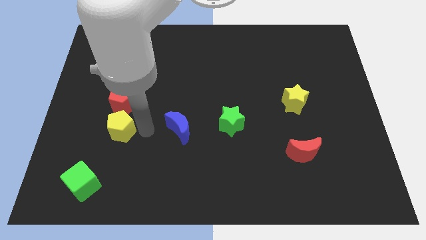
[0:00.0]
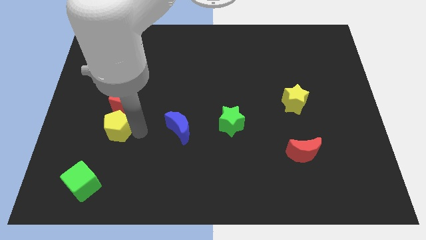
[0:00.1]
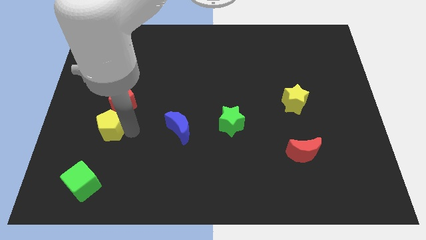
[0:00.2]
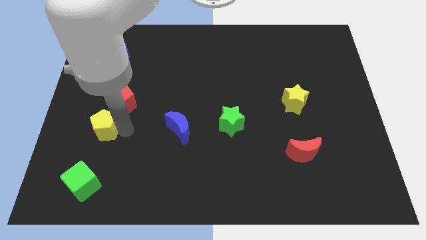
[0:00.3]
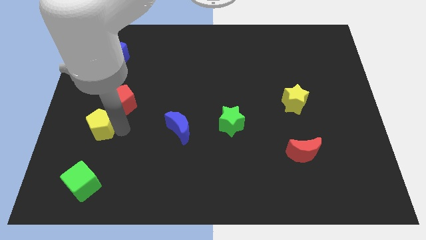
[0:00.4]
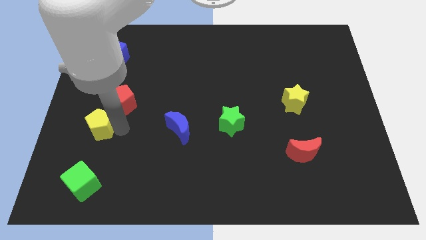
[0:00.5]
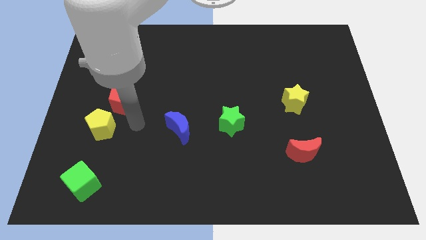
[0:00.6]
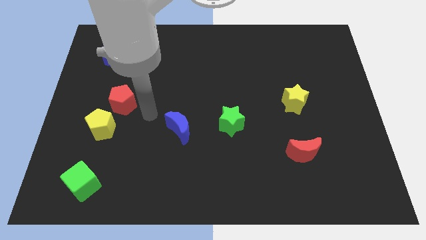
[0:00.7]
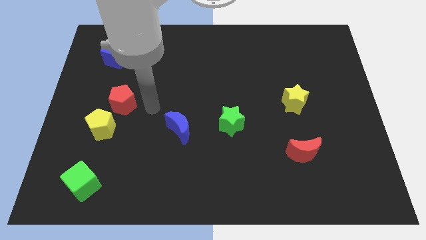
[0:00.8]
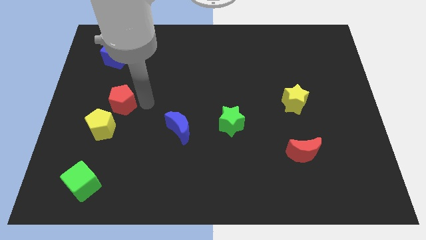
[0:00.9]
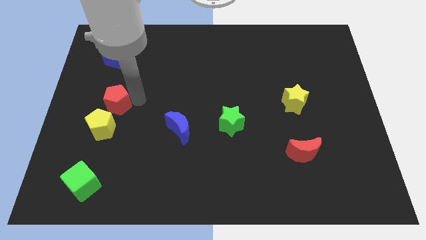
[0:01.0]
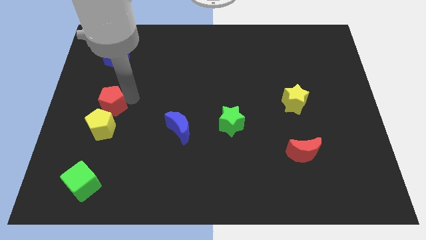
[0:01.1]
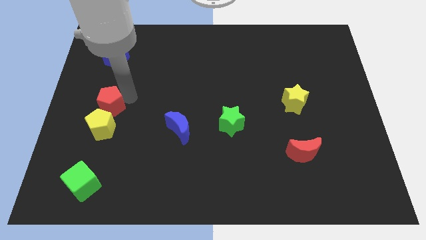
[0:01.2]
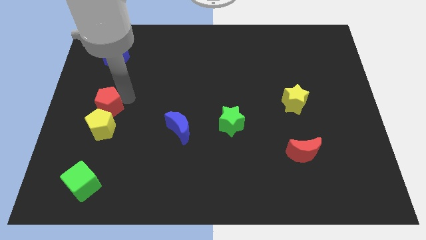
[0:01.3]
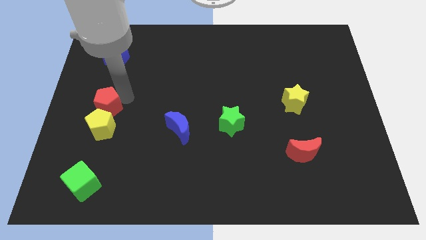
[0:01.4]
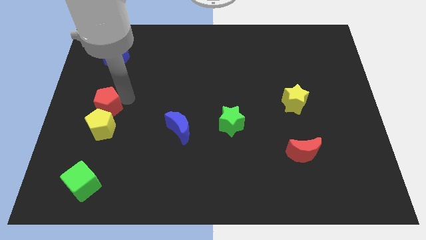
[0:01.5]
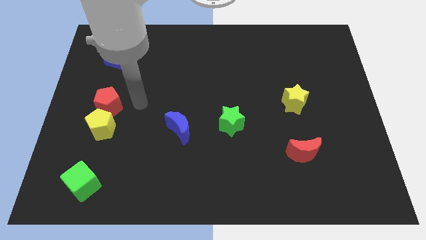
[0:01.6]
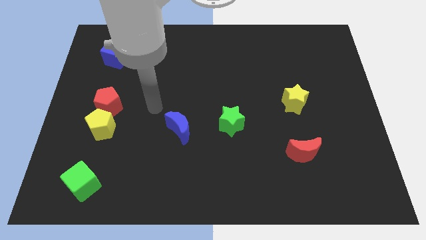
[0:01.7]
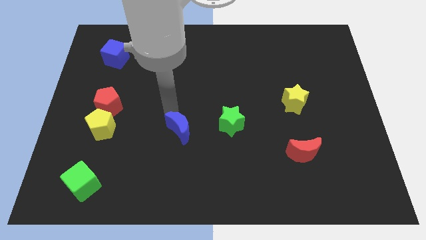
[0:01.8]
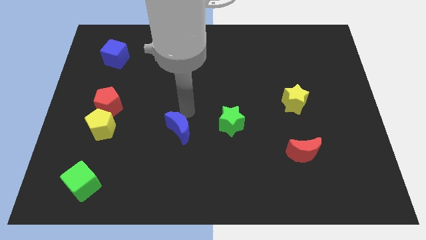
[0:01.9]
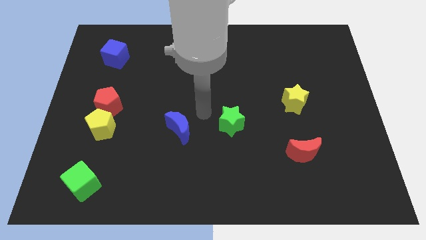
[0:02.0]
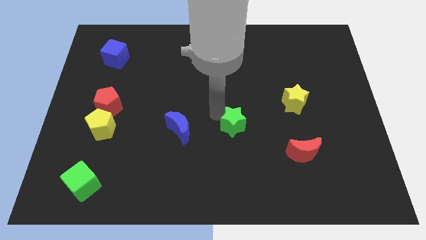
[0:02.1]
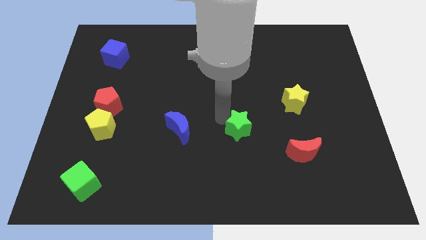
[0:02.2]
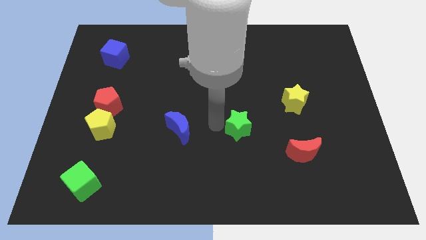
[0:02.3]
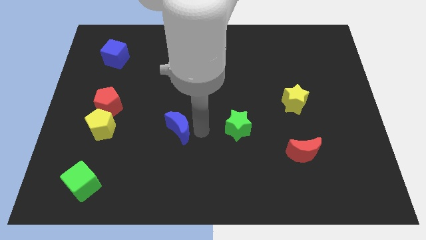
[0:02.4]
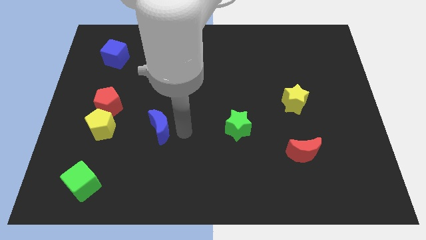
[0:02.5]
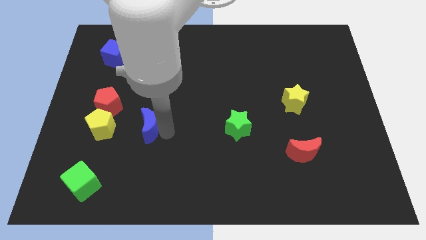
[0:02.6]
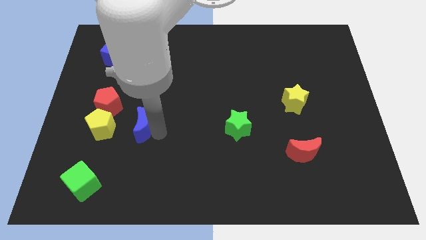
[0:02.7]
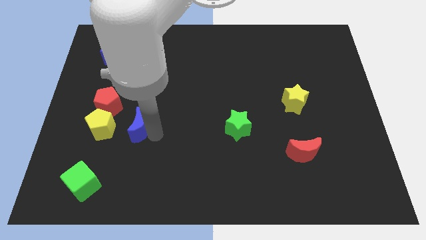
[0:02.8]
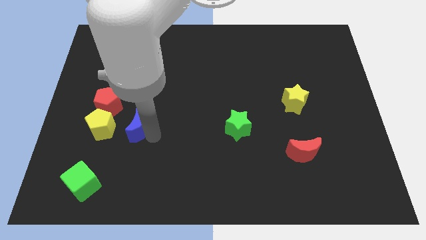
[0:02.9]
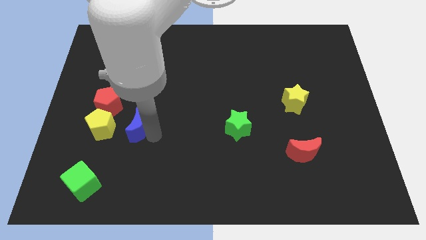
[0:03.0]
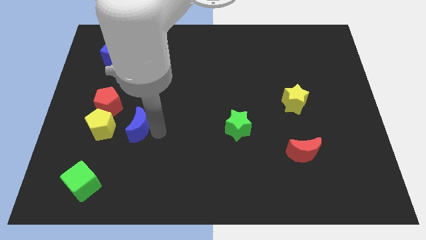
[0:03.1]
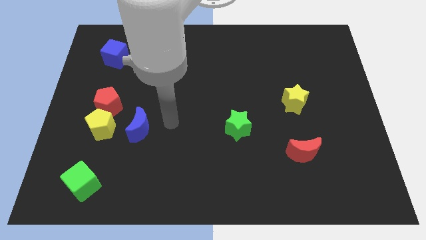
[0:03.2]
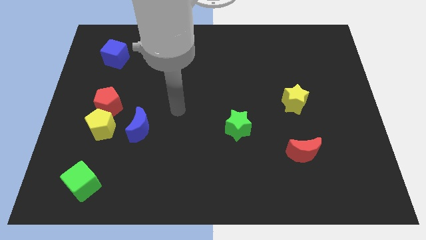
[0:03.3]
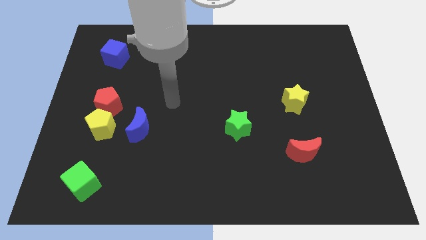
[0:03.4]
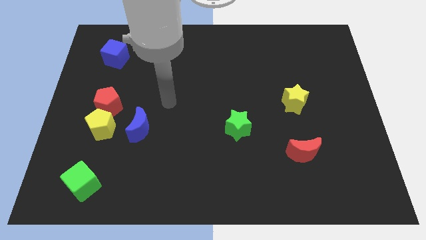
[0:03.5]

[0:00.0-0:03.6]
move the blue moon and red and yellow pentagon to the center left

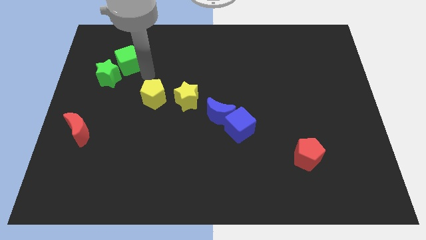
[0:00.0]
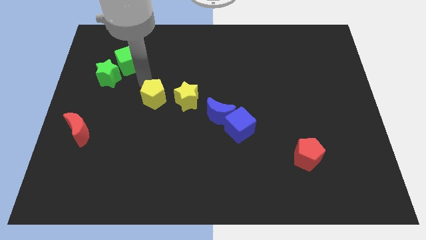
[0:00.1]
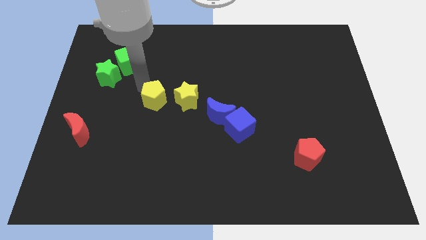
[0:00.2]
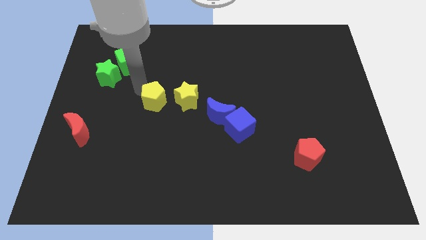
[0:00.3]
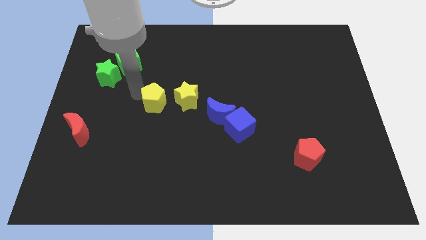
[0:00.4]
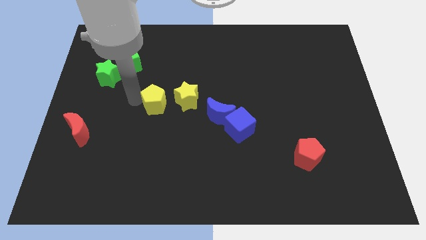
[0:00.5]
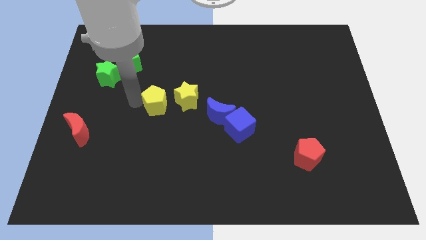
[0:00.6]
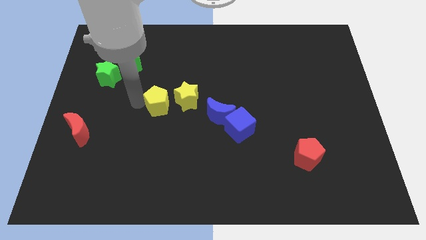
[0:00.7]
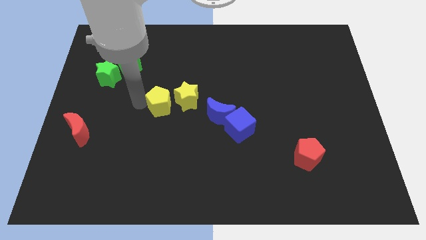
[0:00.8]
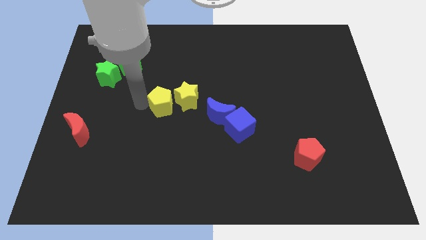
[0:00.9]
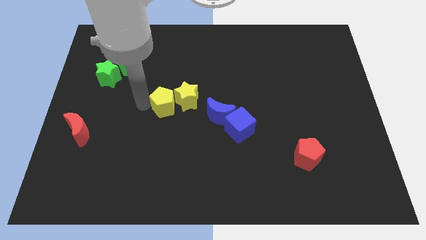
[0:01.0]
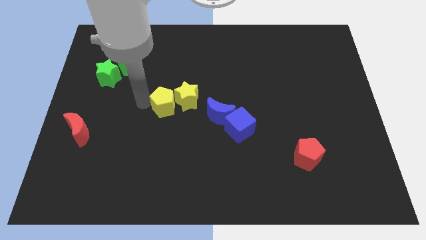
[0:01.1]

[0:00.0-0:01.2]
push the yellow pentagon left side of the yellow star

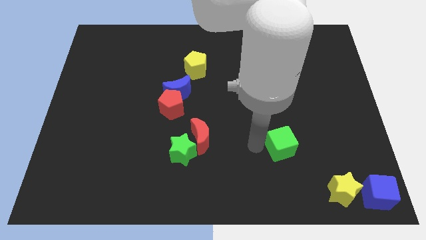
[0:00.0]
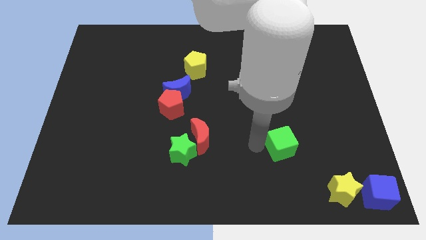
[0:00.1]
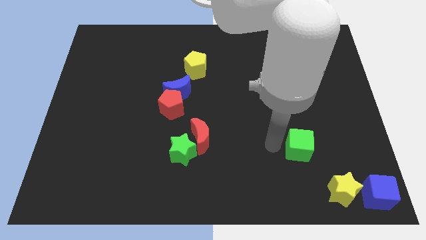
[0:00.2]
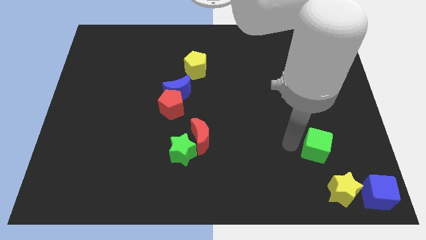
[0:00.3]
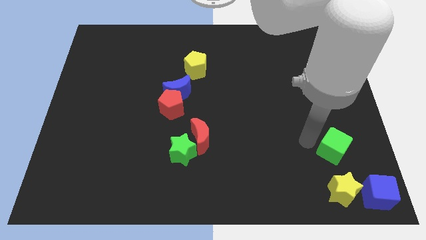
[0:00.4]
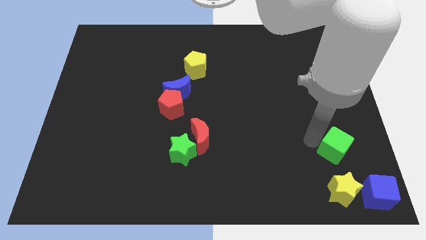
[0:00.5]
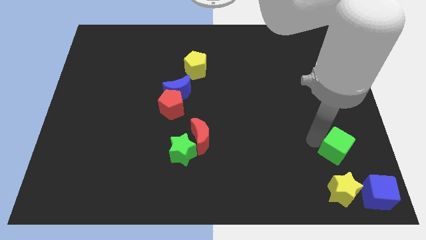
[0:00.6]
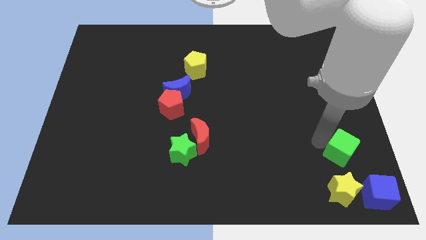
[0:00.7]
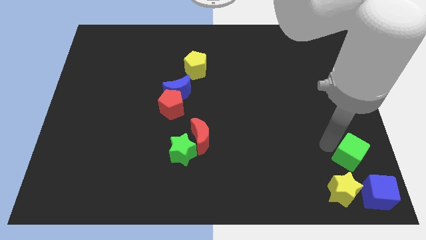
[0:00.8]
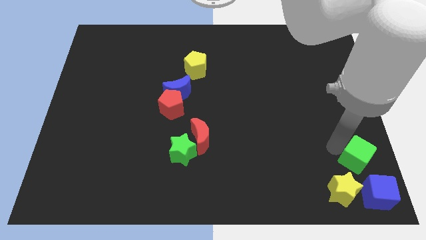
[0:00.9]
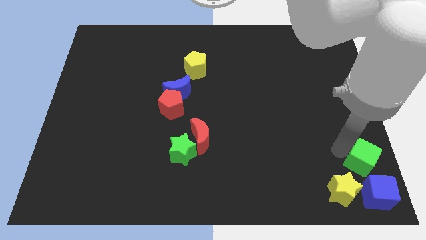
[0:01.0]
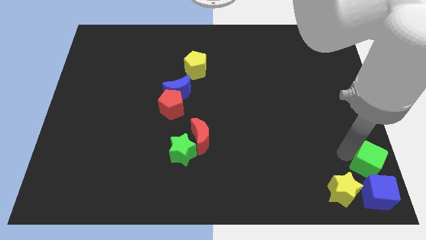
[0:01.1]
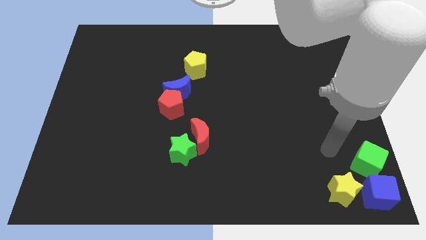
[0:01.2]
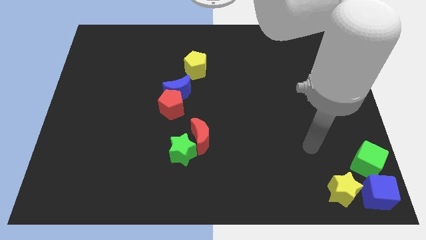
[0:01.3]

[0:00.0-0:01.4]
move the green cube to the top of the blue cube

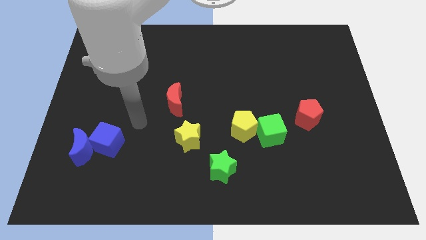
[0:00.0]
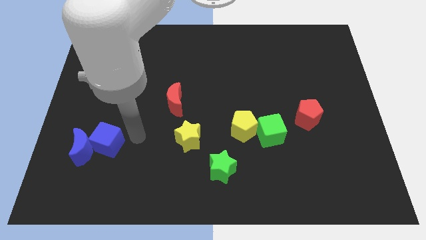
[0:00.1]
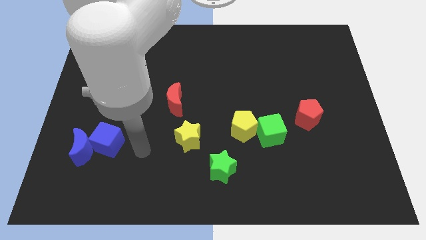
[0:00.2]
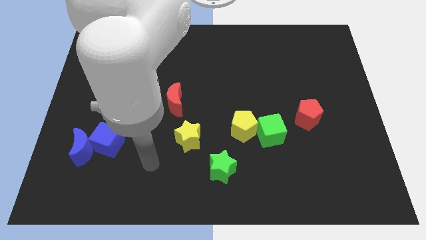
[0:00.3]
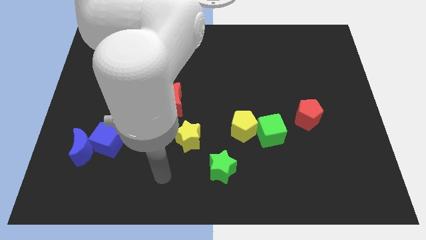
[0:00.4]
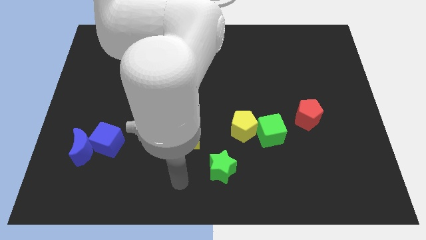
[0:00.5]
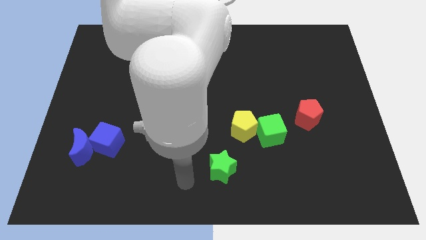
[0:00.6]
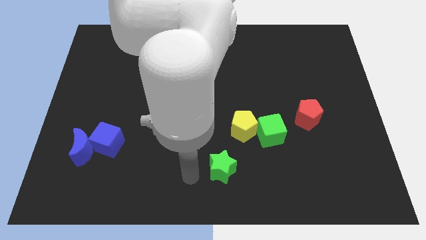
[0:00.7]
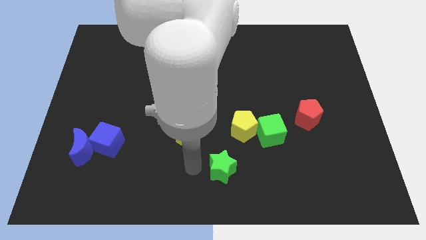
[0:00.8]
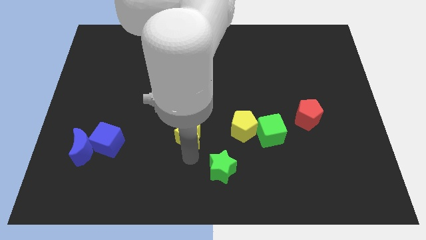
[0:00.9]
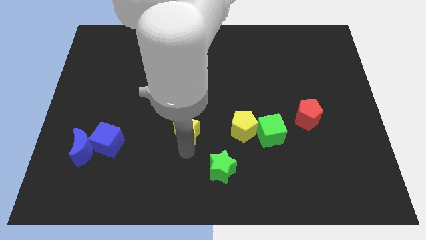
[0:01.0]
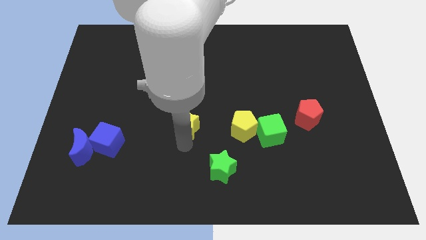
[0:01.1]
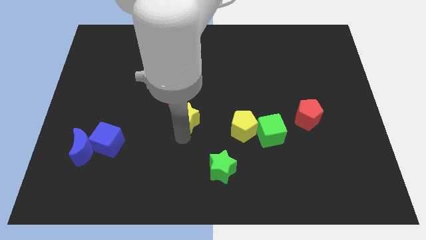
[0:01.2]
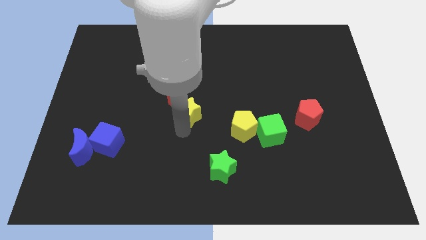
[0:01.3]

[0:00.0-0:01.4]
move yellow star towards red crescent

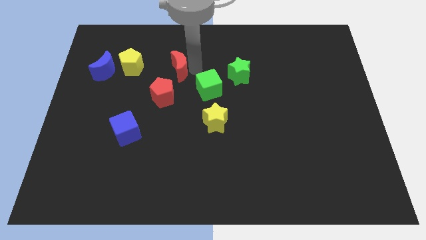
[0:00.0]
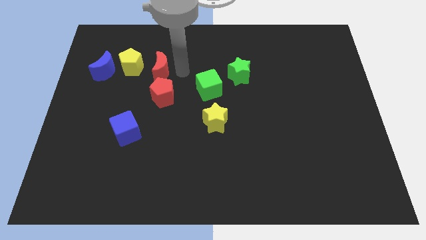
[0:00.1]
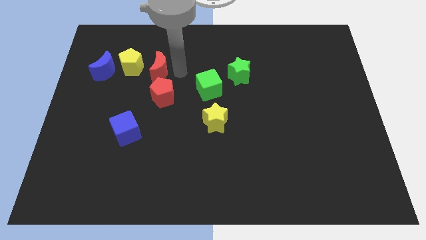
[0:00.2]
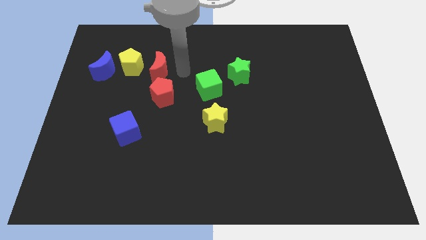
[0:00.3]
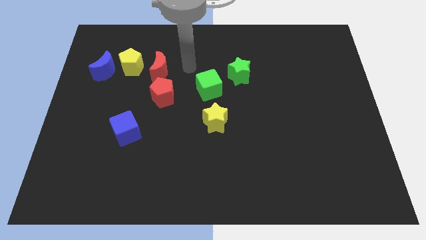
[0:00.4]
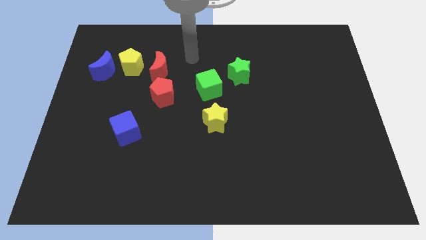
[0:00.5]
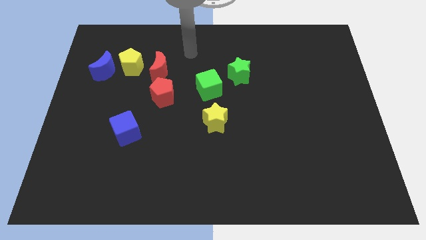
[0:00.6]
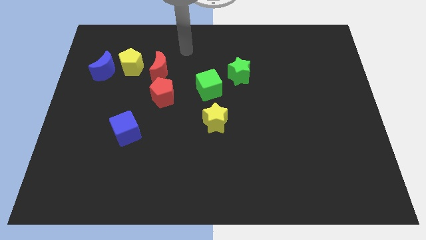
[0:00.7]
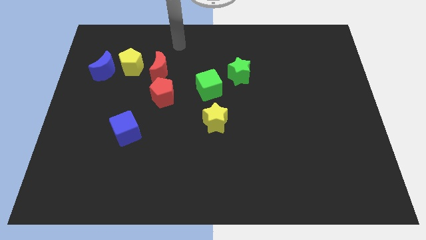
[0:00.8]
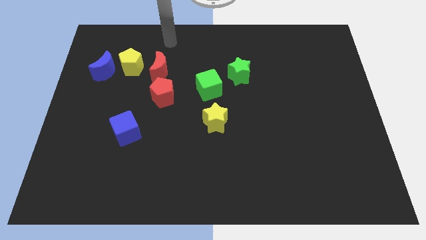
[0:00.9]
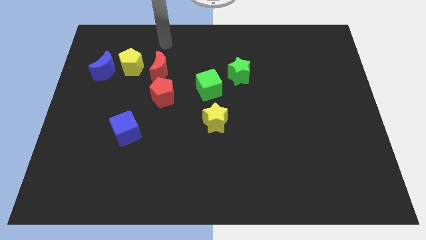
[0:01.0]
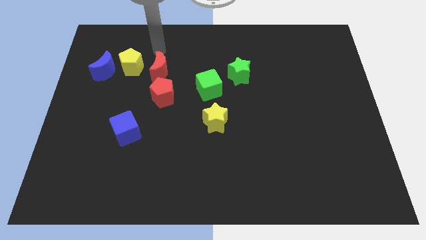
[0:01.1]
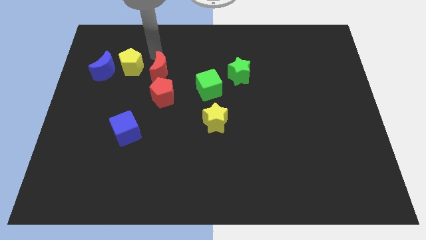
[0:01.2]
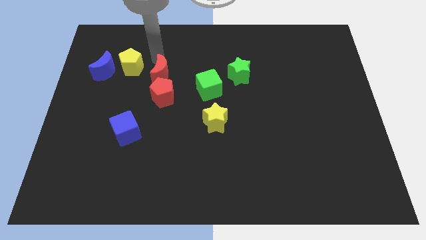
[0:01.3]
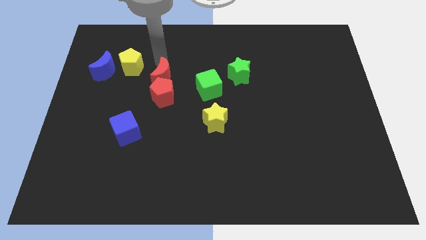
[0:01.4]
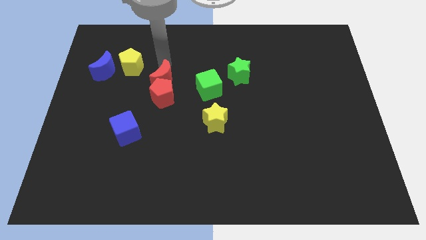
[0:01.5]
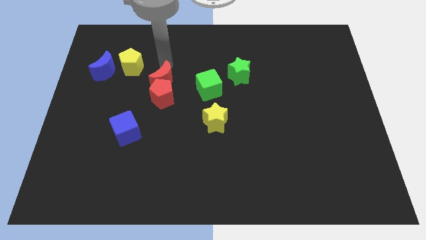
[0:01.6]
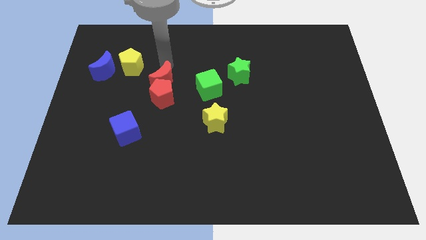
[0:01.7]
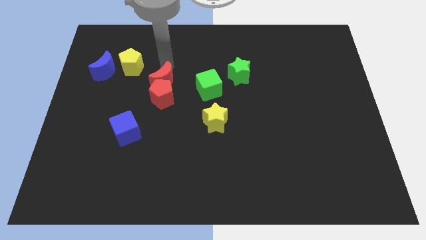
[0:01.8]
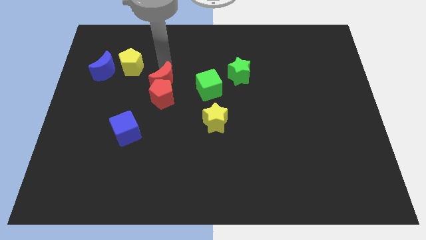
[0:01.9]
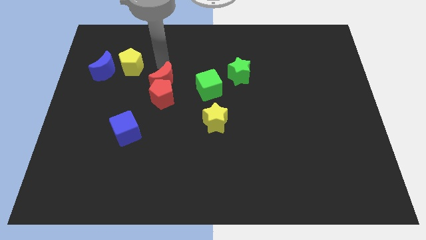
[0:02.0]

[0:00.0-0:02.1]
place the red moon close to red pentagon
